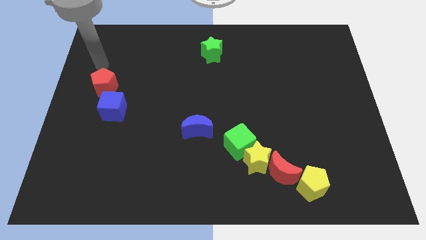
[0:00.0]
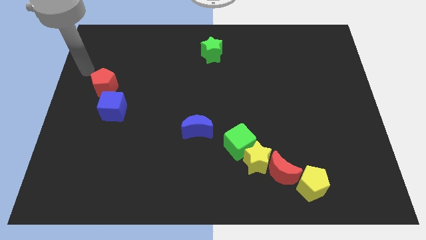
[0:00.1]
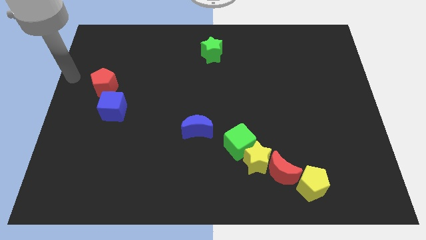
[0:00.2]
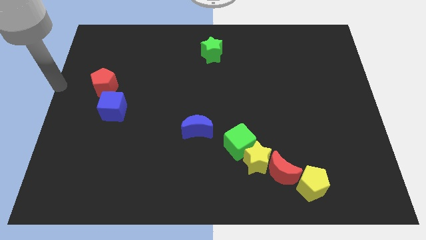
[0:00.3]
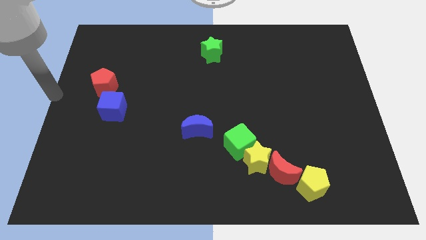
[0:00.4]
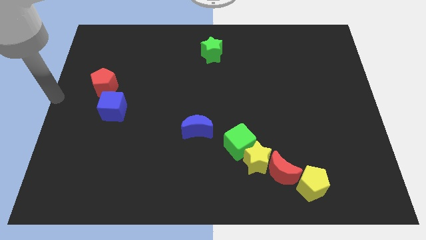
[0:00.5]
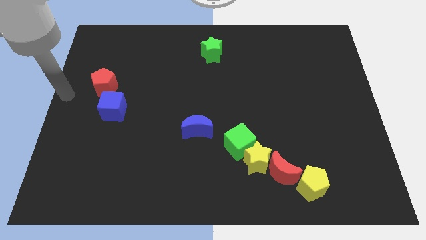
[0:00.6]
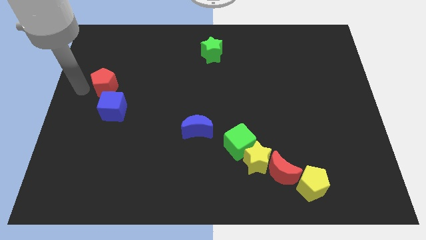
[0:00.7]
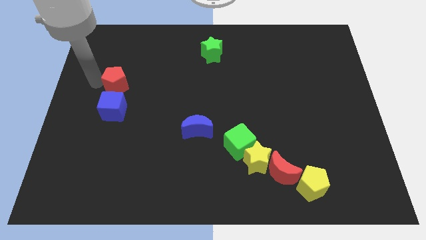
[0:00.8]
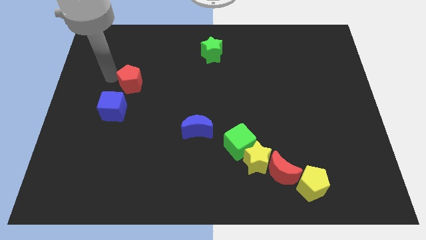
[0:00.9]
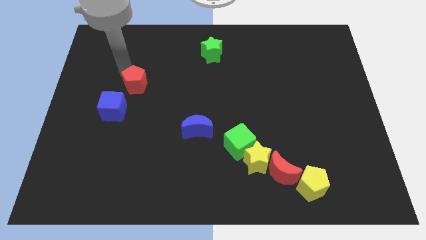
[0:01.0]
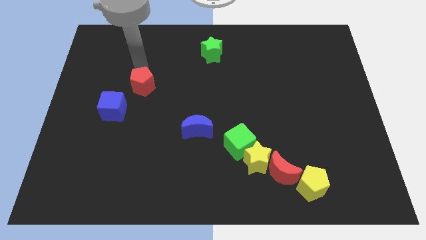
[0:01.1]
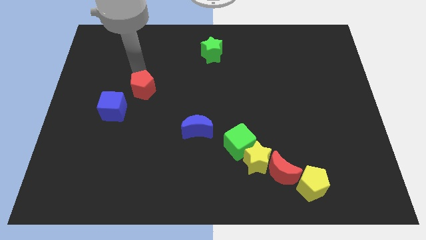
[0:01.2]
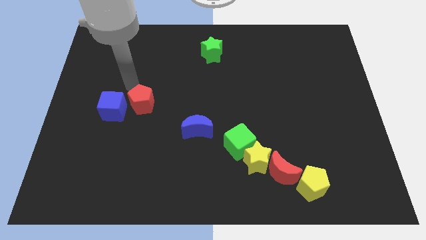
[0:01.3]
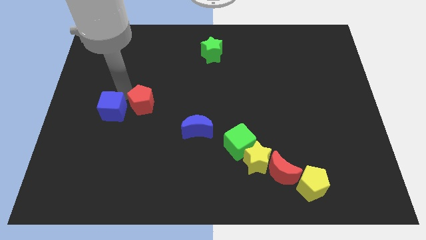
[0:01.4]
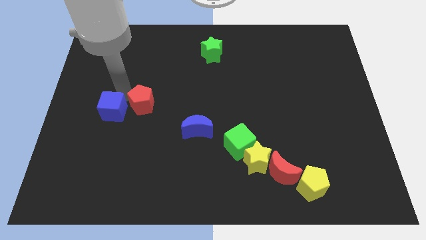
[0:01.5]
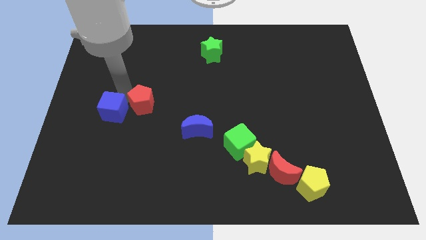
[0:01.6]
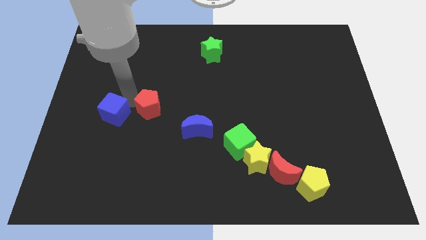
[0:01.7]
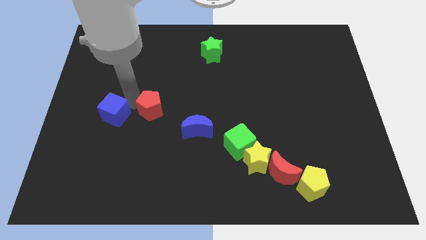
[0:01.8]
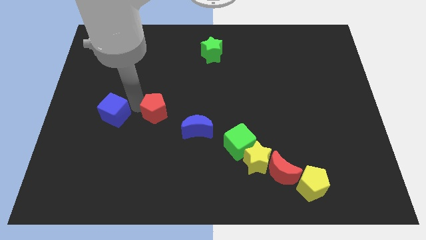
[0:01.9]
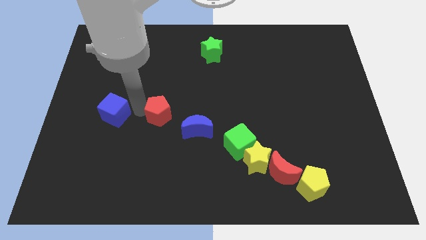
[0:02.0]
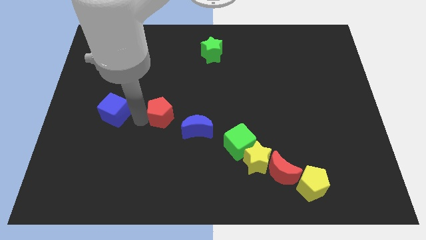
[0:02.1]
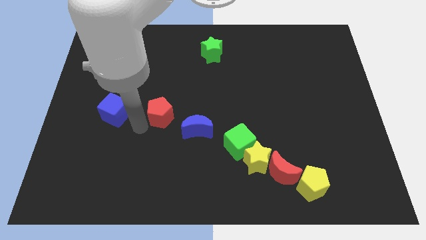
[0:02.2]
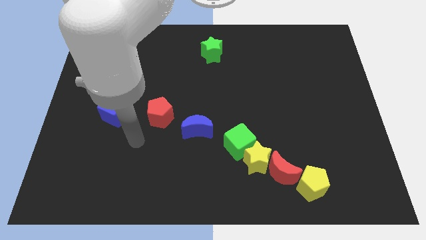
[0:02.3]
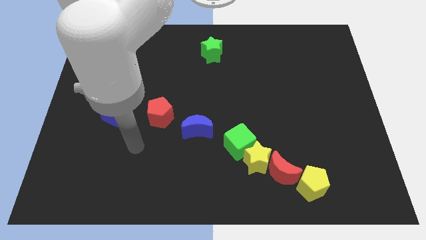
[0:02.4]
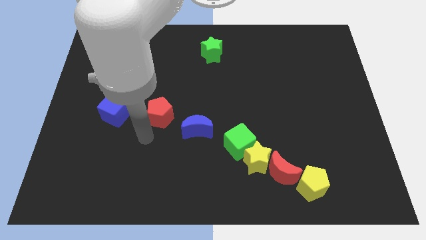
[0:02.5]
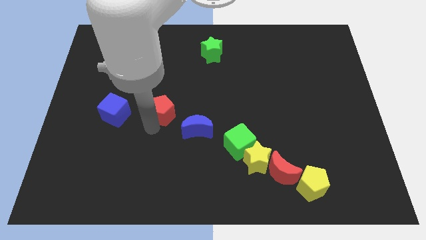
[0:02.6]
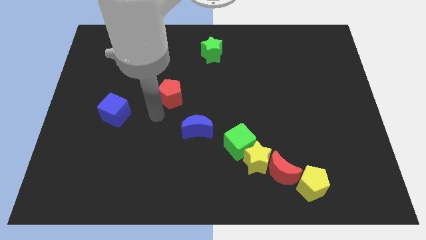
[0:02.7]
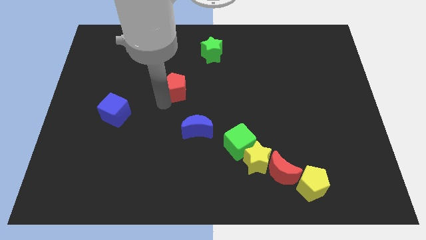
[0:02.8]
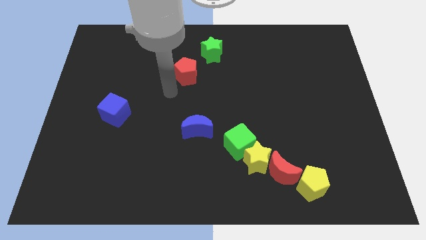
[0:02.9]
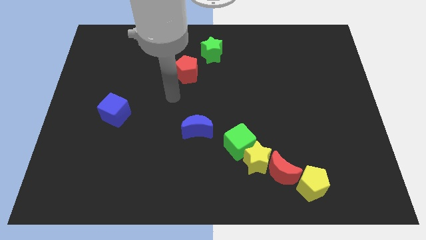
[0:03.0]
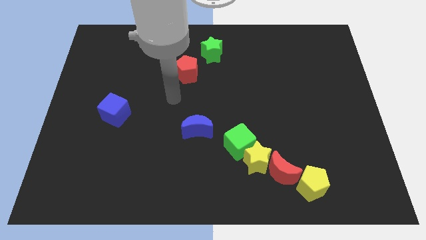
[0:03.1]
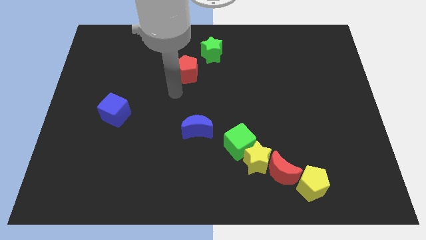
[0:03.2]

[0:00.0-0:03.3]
move the red pentagon and make a triangle with both the blue blocks

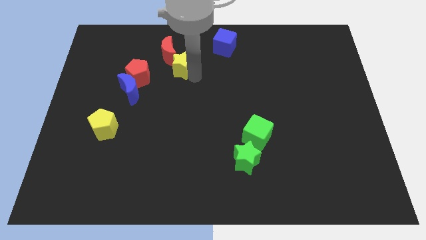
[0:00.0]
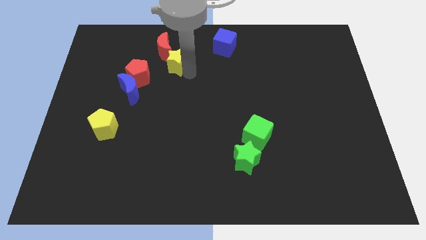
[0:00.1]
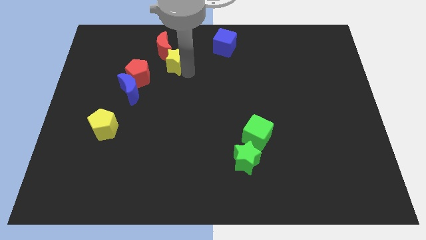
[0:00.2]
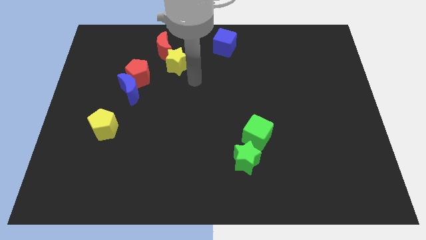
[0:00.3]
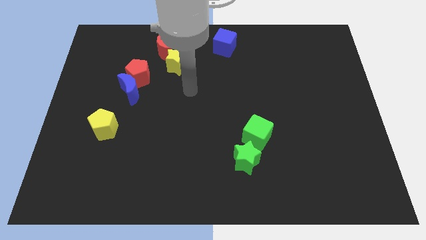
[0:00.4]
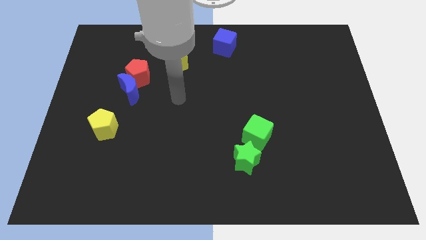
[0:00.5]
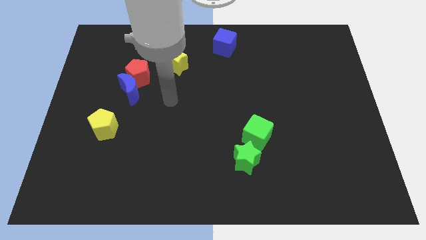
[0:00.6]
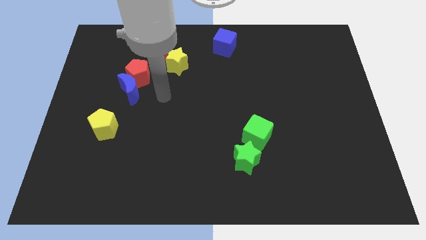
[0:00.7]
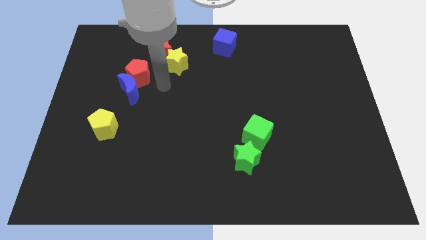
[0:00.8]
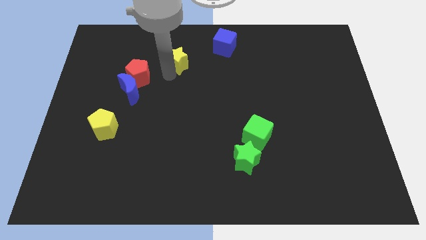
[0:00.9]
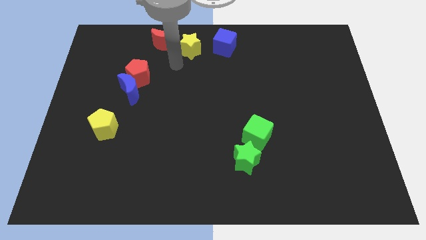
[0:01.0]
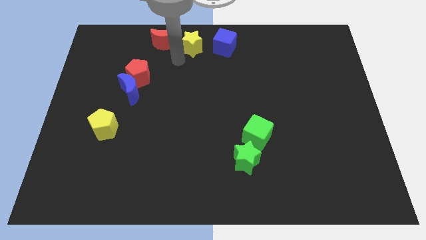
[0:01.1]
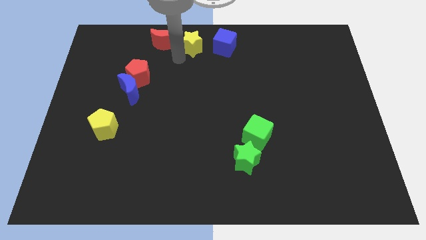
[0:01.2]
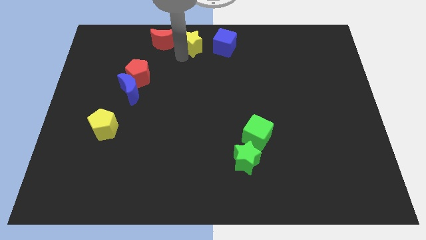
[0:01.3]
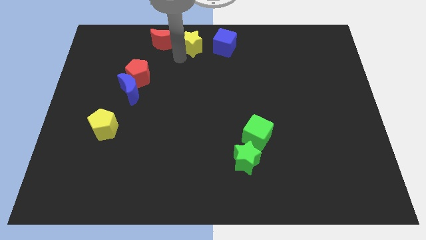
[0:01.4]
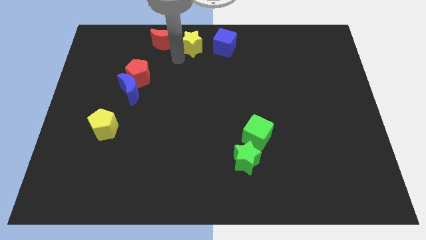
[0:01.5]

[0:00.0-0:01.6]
push the yellow star in between blue cube and red crescent

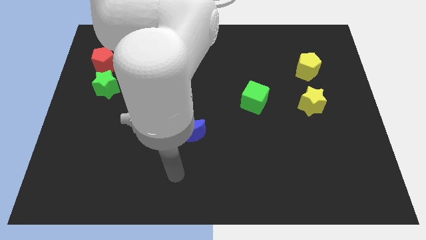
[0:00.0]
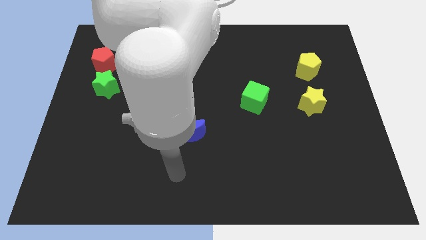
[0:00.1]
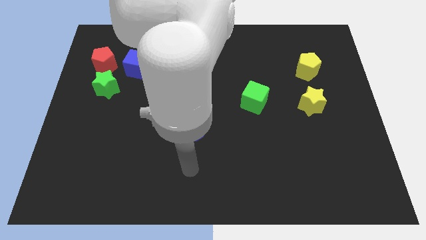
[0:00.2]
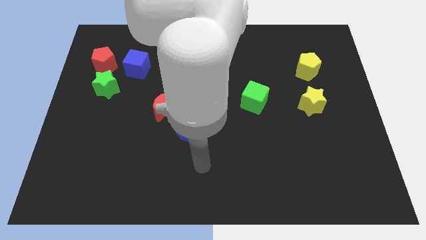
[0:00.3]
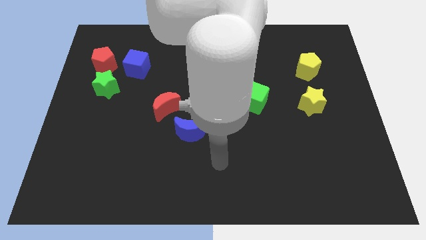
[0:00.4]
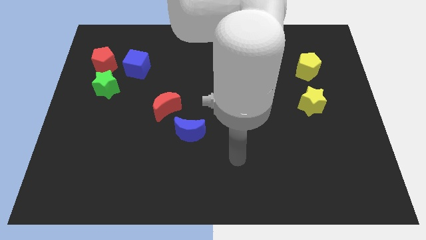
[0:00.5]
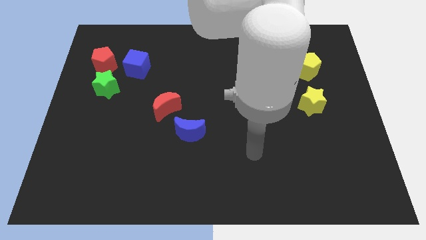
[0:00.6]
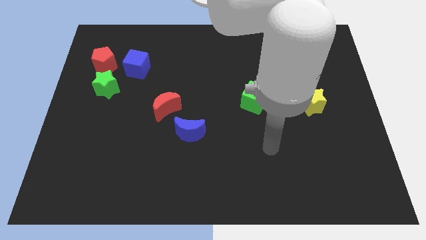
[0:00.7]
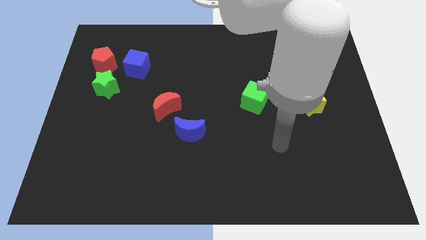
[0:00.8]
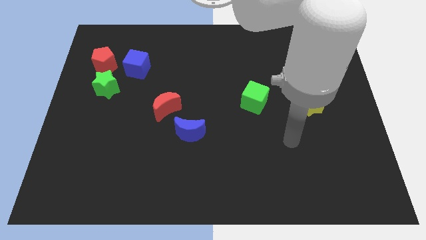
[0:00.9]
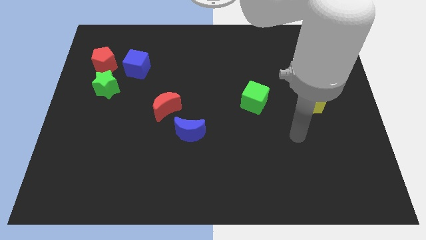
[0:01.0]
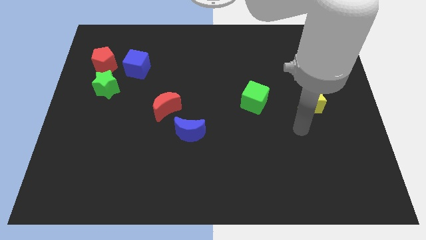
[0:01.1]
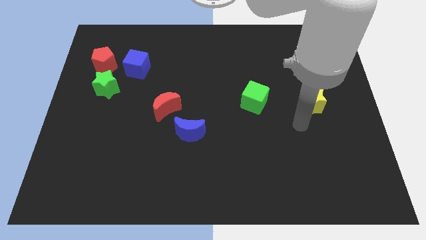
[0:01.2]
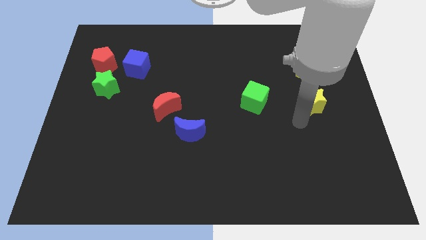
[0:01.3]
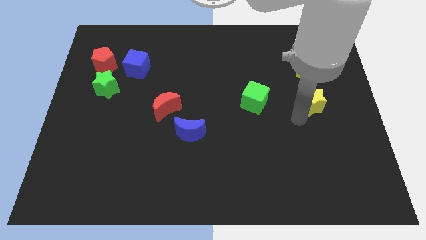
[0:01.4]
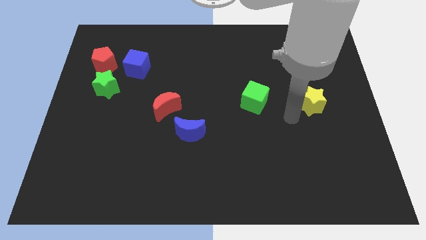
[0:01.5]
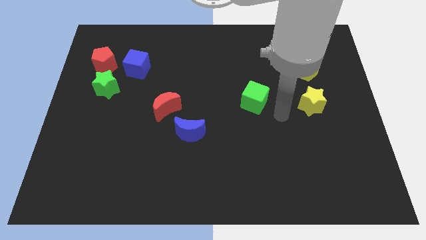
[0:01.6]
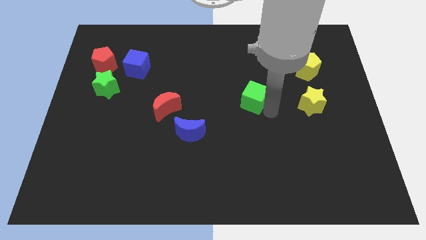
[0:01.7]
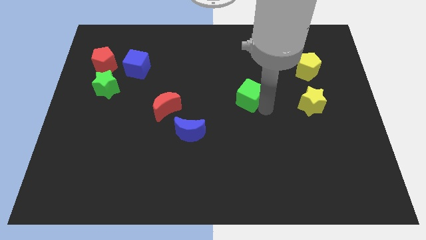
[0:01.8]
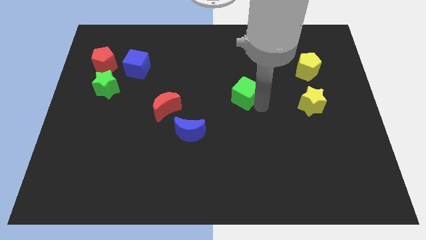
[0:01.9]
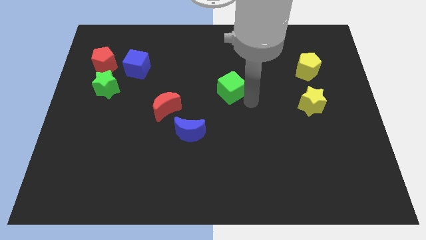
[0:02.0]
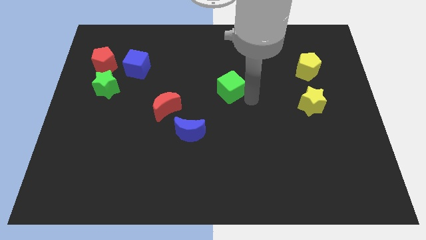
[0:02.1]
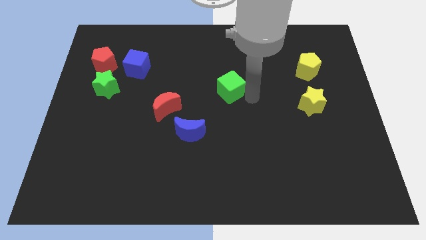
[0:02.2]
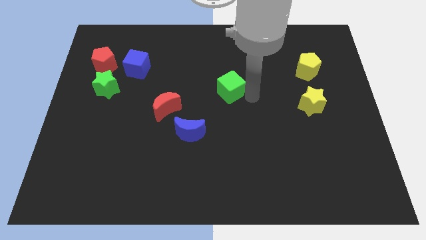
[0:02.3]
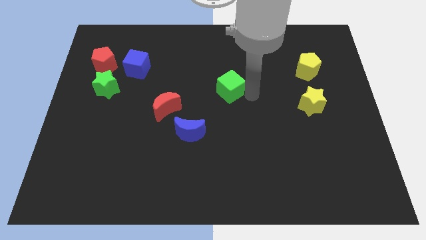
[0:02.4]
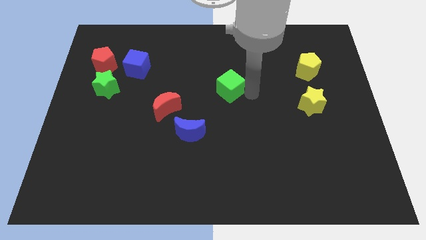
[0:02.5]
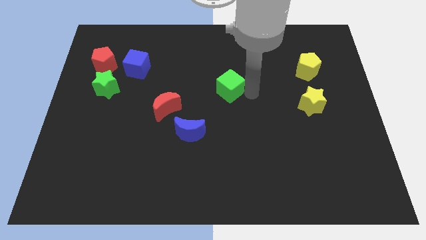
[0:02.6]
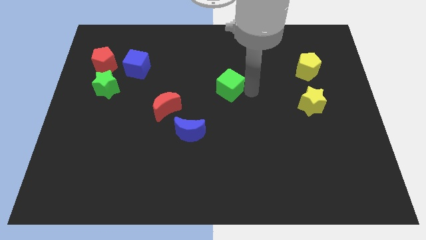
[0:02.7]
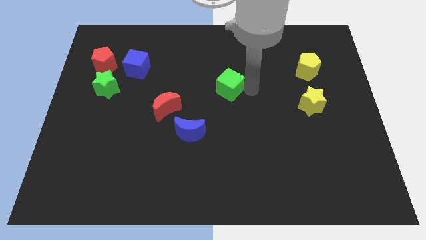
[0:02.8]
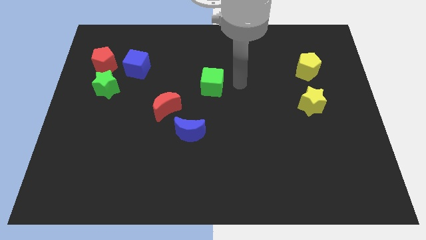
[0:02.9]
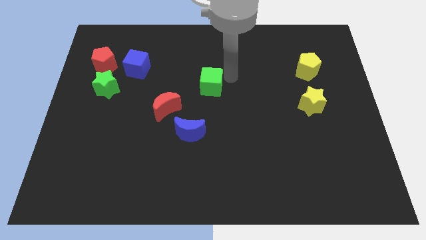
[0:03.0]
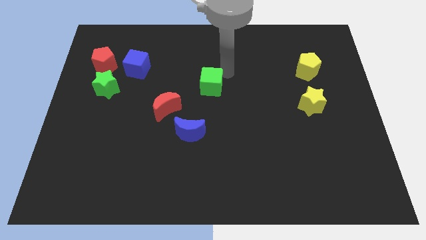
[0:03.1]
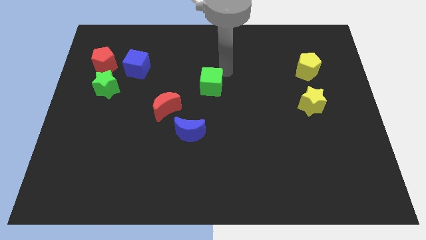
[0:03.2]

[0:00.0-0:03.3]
move the green cube to the top side of the blue crescent

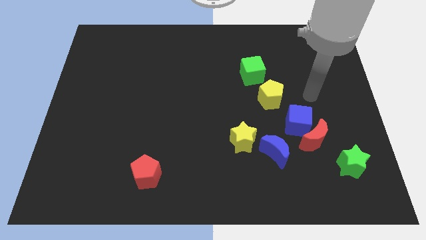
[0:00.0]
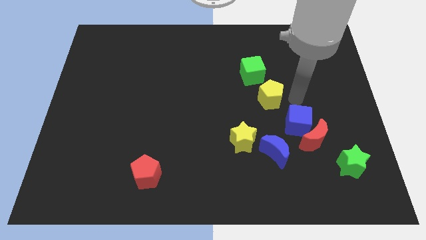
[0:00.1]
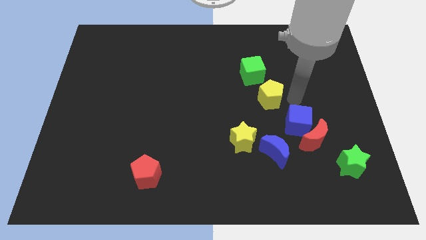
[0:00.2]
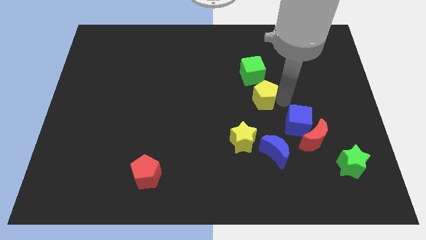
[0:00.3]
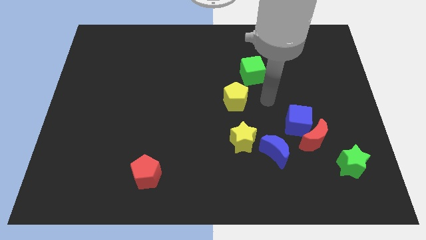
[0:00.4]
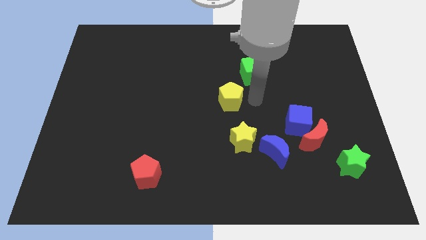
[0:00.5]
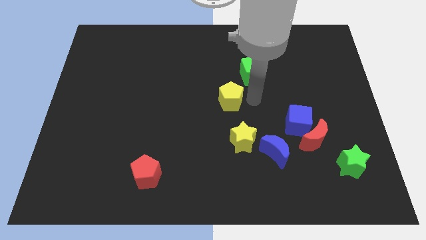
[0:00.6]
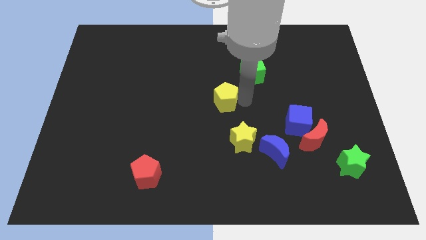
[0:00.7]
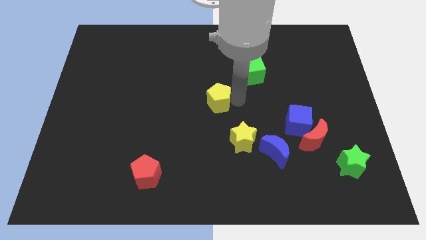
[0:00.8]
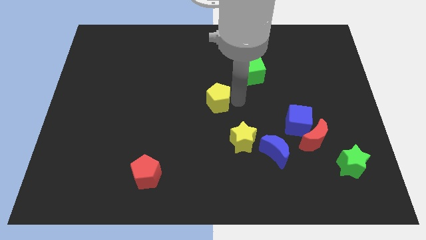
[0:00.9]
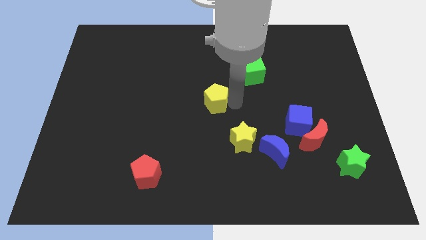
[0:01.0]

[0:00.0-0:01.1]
move the yellow pentagon to the right of the board
